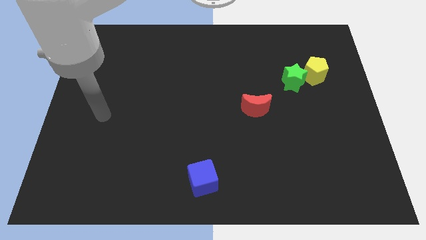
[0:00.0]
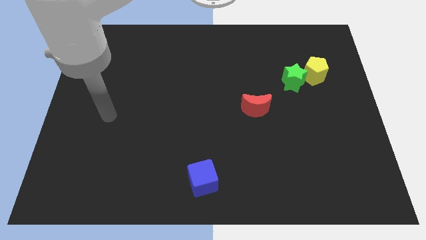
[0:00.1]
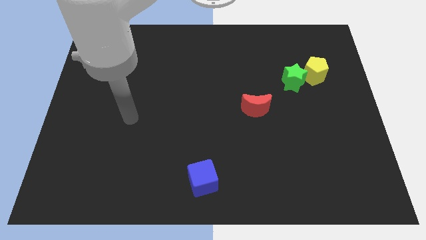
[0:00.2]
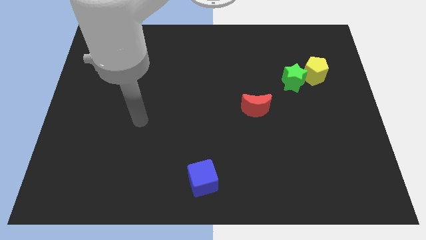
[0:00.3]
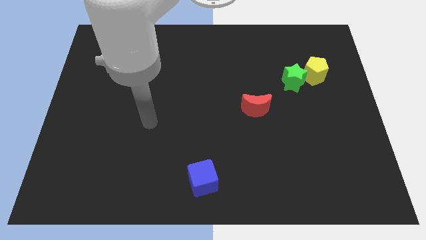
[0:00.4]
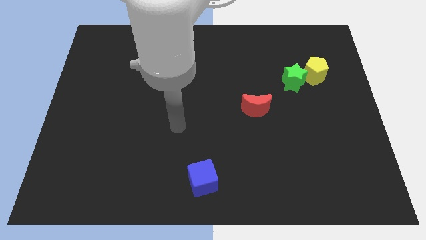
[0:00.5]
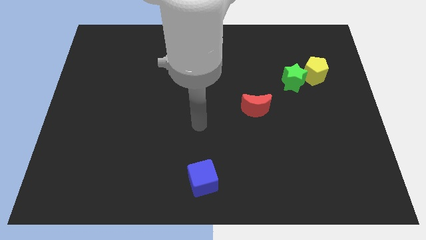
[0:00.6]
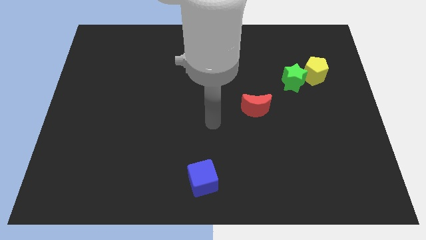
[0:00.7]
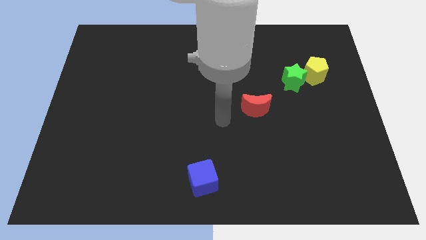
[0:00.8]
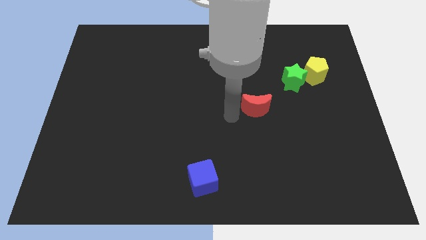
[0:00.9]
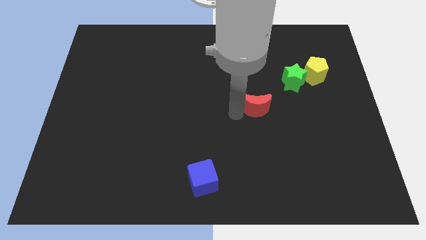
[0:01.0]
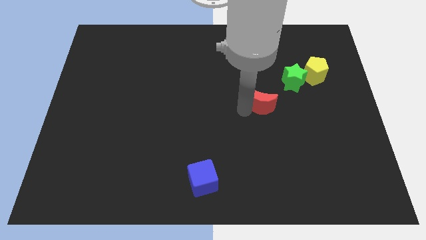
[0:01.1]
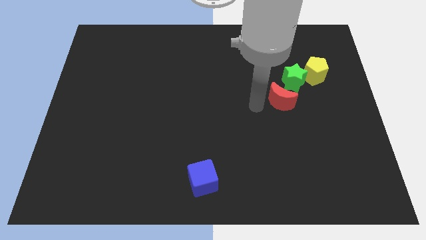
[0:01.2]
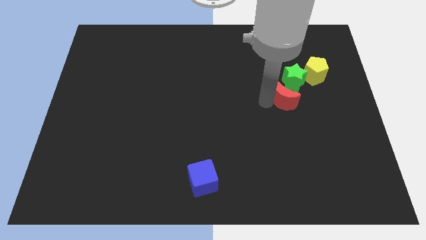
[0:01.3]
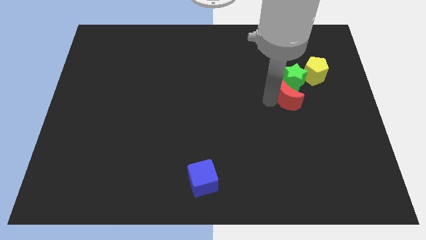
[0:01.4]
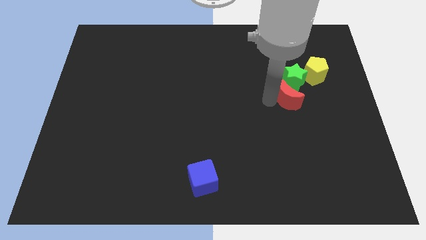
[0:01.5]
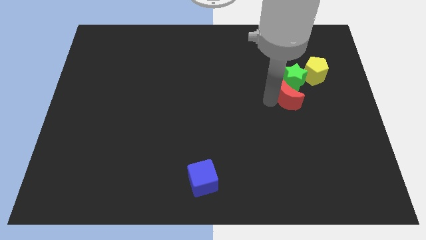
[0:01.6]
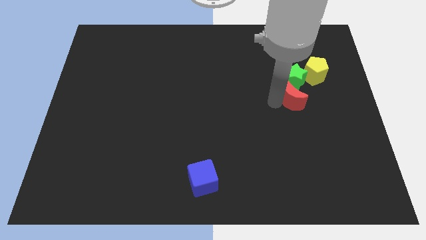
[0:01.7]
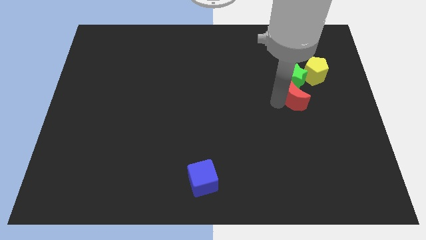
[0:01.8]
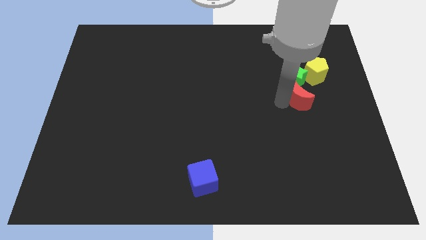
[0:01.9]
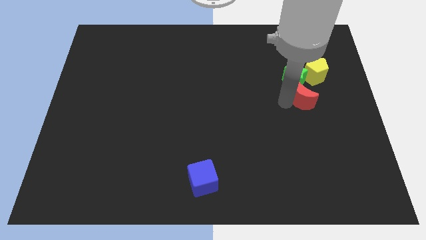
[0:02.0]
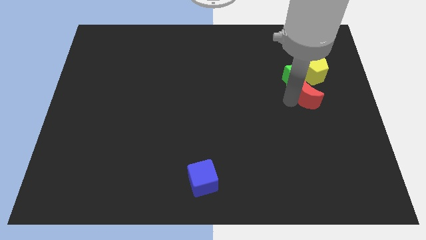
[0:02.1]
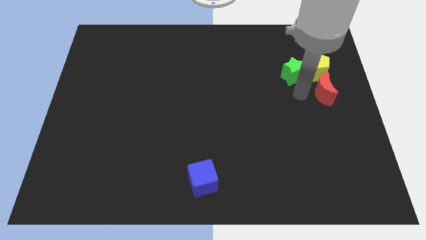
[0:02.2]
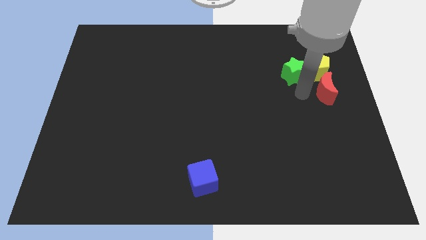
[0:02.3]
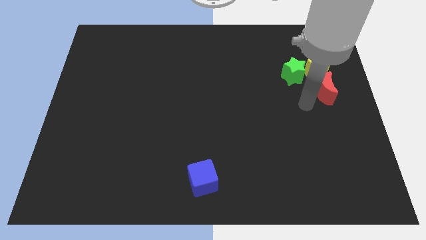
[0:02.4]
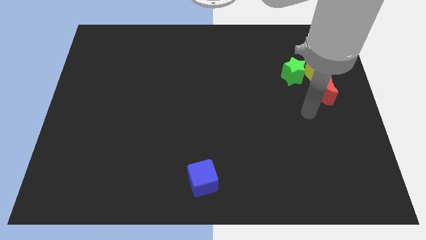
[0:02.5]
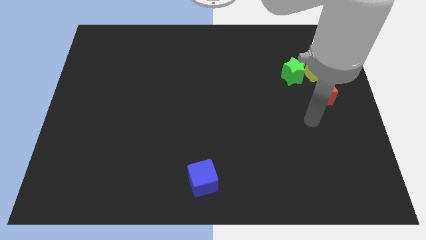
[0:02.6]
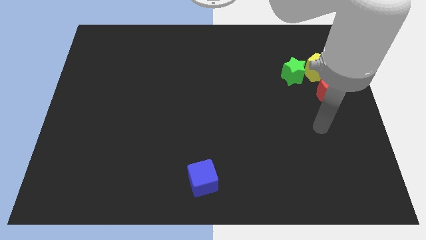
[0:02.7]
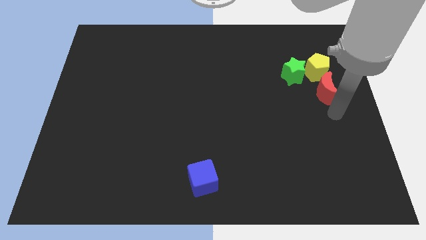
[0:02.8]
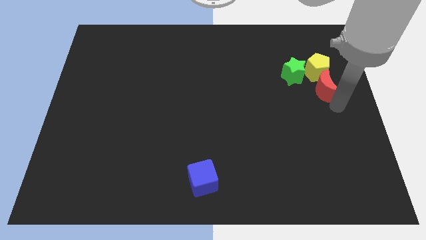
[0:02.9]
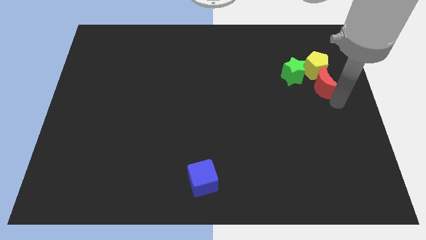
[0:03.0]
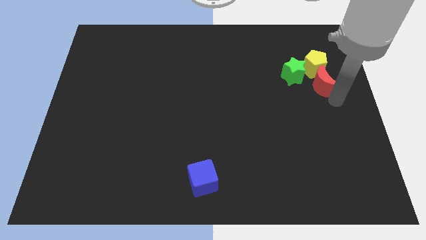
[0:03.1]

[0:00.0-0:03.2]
slide the moon next to the yellow pentagon

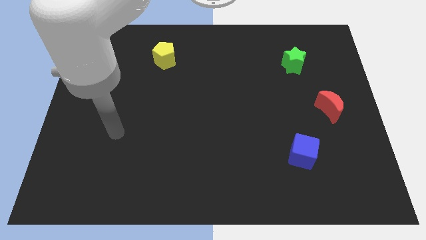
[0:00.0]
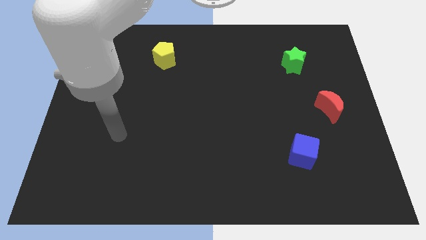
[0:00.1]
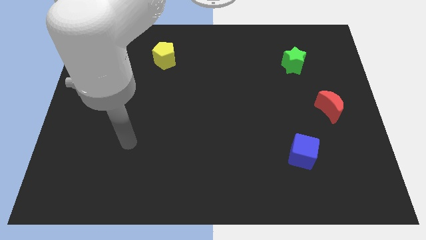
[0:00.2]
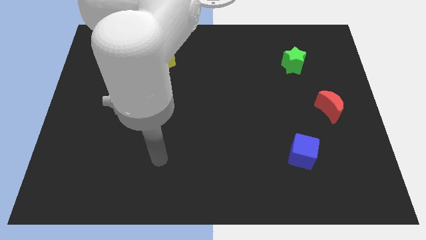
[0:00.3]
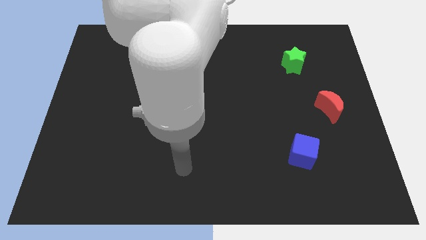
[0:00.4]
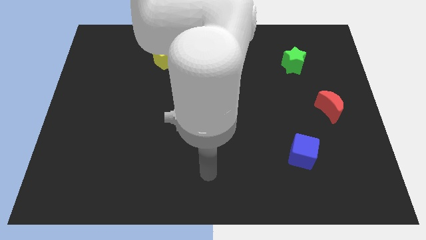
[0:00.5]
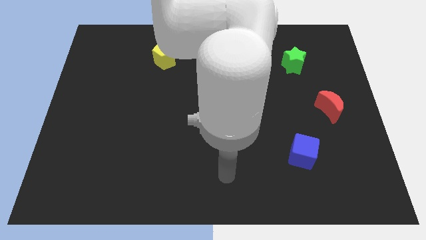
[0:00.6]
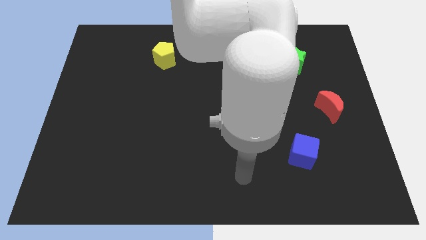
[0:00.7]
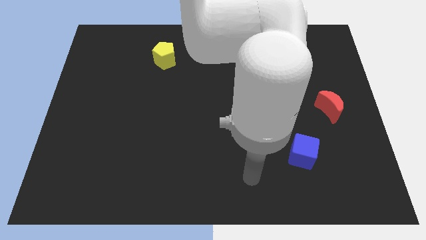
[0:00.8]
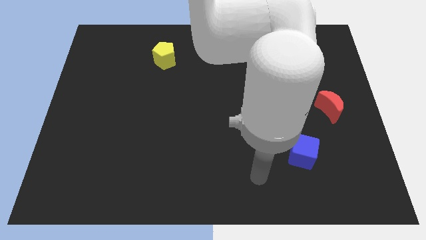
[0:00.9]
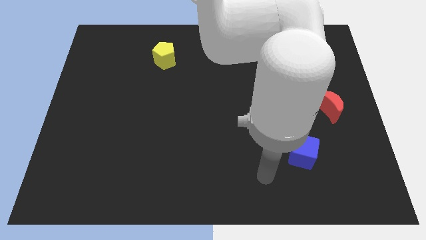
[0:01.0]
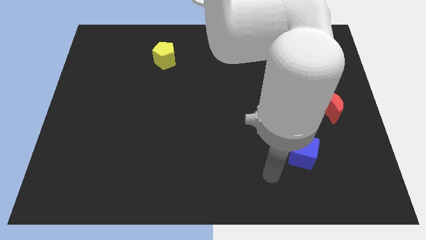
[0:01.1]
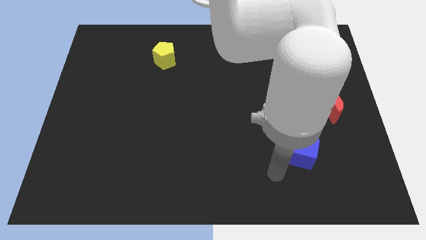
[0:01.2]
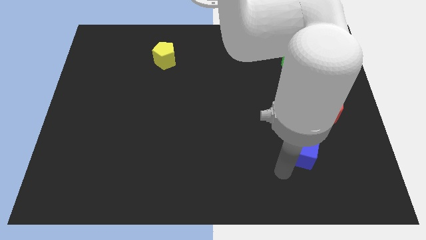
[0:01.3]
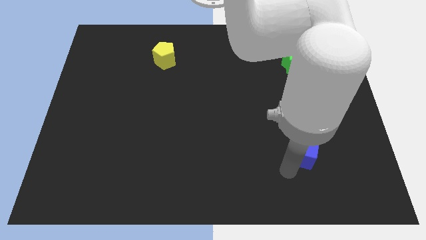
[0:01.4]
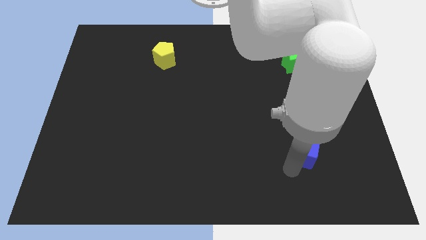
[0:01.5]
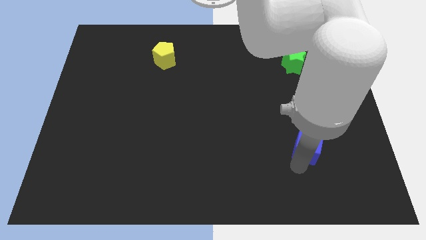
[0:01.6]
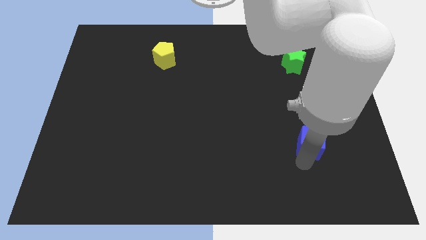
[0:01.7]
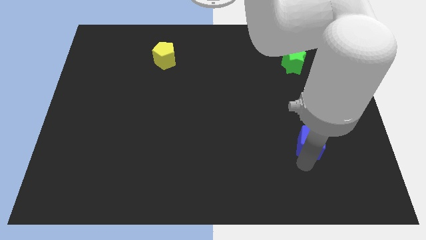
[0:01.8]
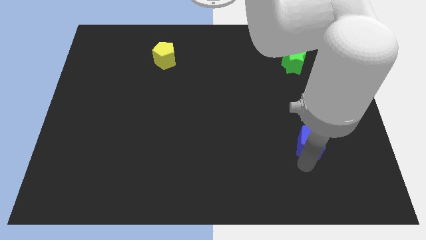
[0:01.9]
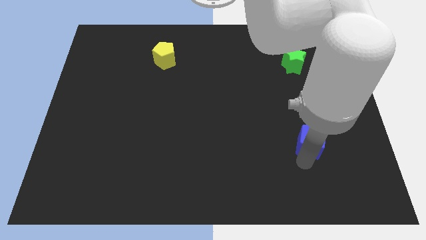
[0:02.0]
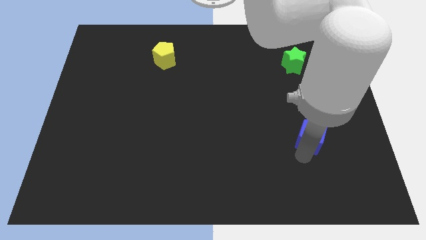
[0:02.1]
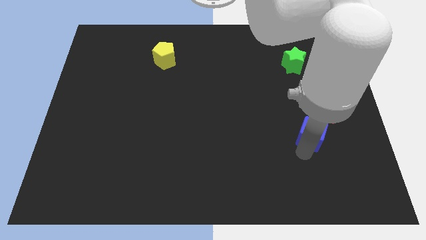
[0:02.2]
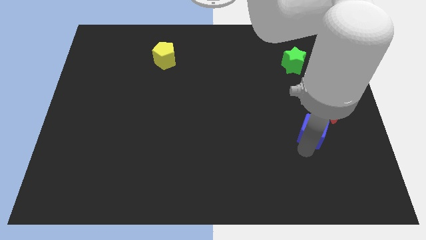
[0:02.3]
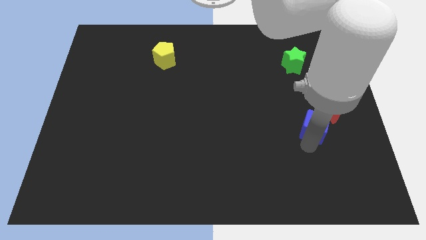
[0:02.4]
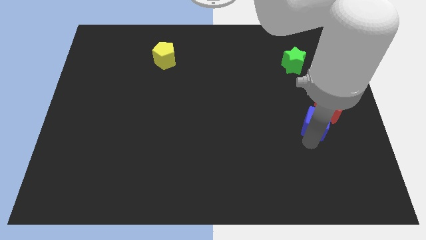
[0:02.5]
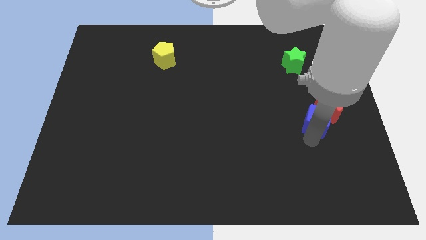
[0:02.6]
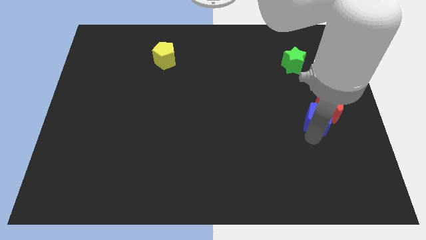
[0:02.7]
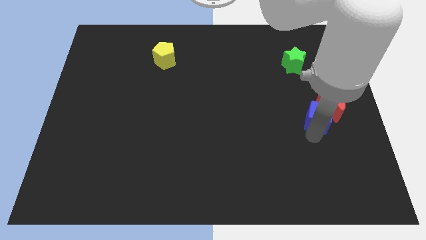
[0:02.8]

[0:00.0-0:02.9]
move the cube towards the red moon

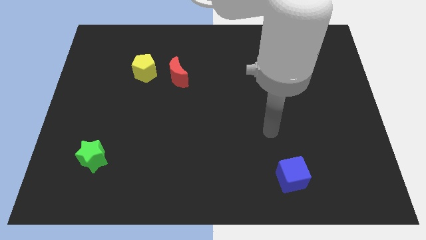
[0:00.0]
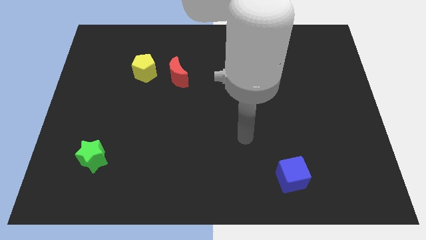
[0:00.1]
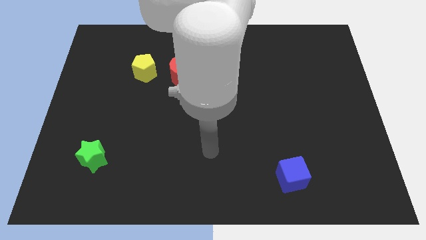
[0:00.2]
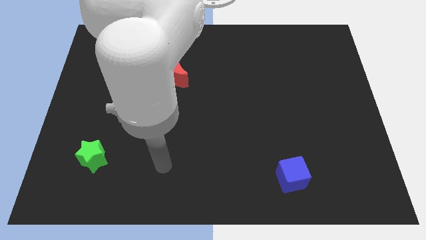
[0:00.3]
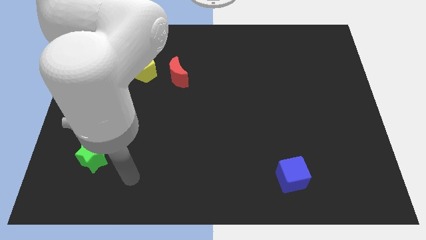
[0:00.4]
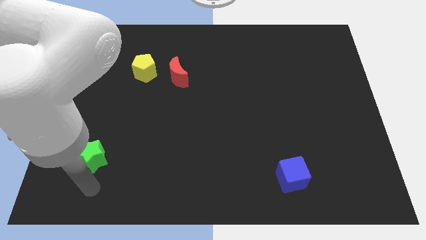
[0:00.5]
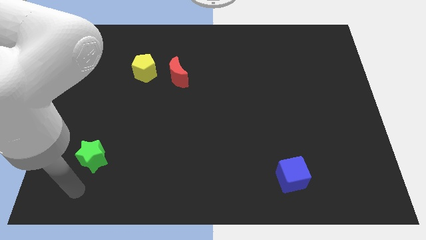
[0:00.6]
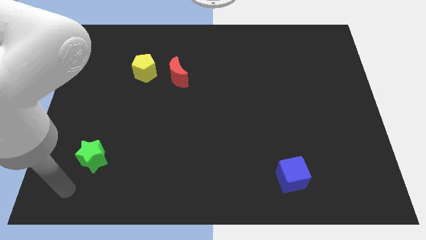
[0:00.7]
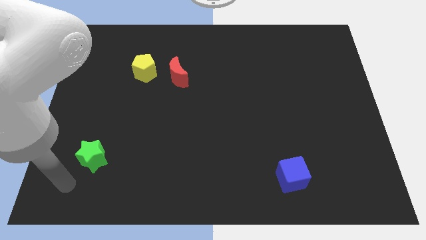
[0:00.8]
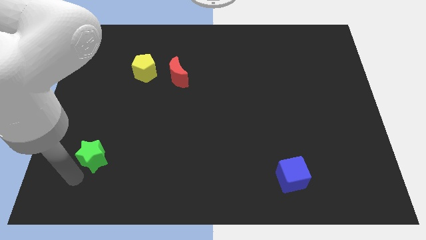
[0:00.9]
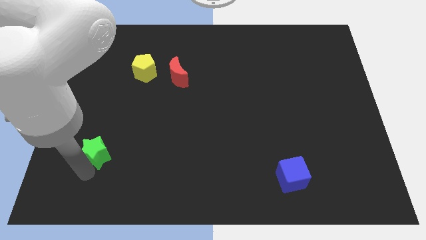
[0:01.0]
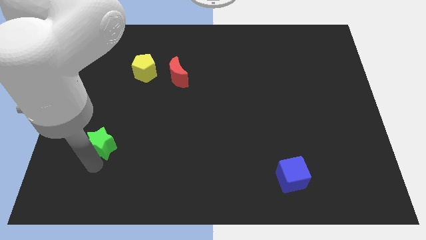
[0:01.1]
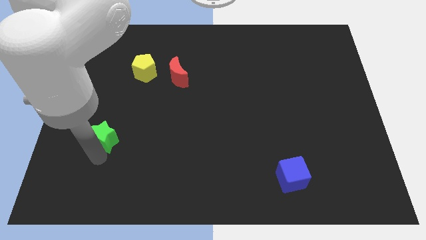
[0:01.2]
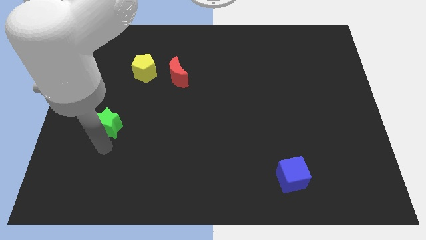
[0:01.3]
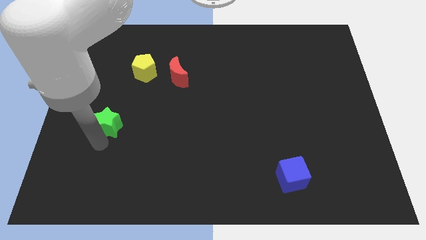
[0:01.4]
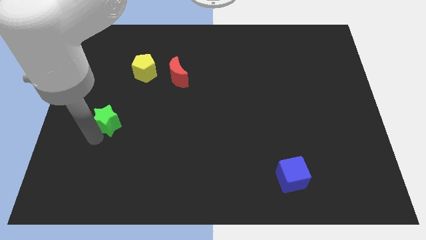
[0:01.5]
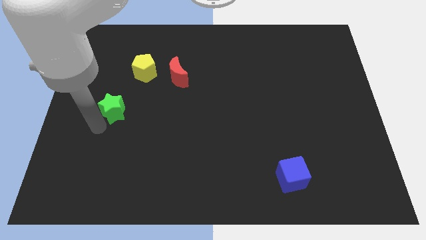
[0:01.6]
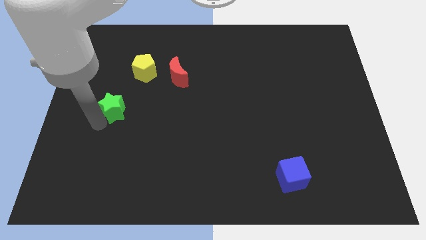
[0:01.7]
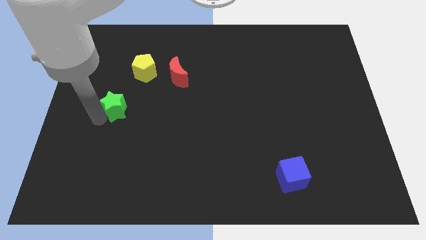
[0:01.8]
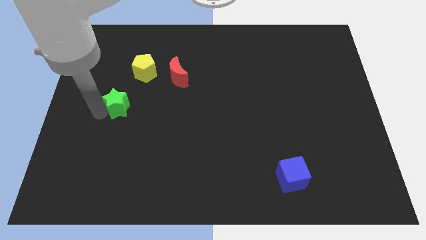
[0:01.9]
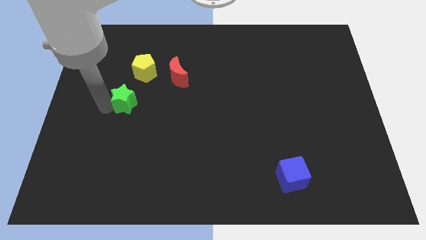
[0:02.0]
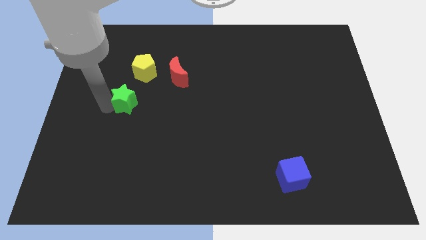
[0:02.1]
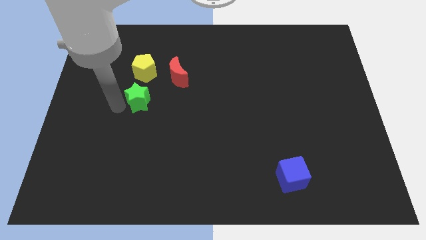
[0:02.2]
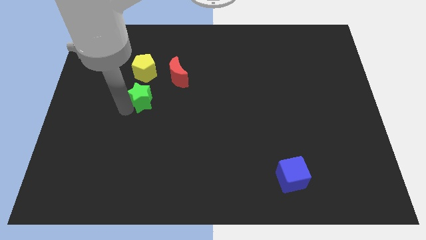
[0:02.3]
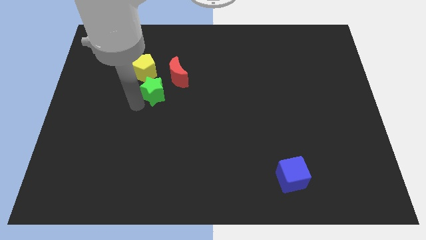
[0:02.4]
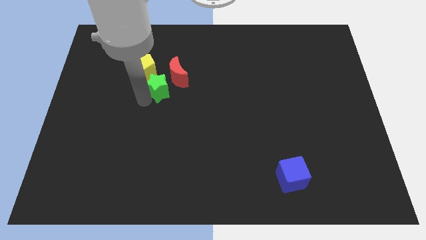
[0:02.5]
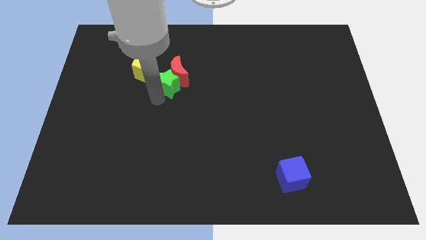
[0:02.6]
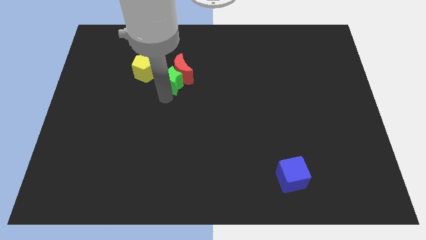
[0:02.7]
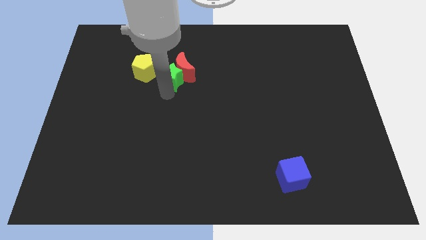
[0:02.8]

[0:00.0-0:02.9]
put the green star next to the red moon
